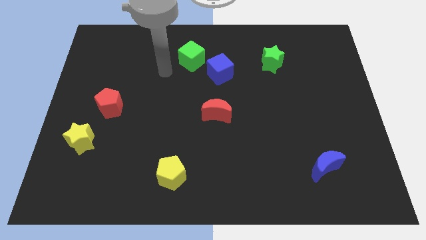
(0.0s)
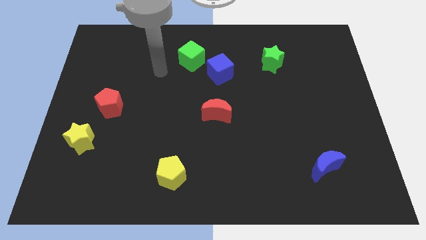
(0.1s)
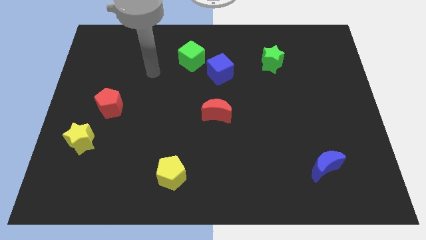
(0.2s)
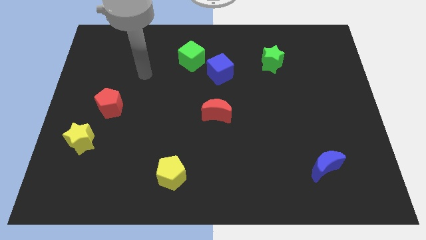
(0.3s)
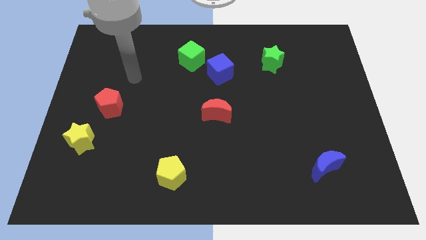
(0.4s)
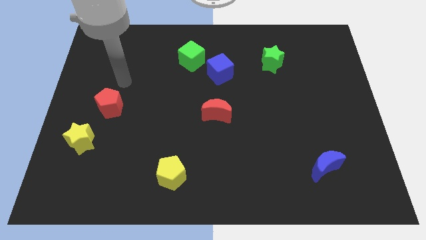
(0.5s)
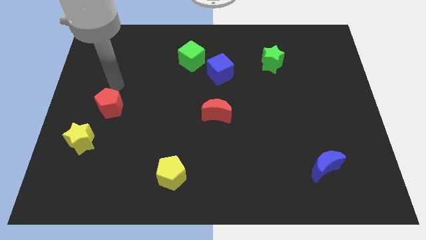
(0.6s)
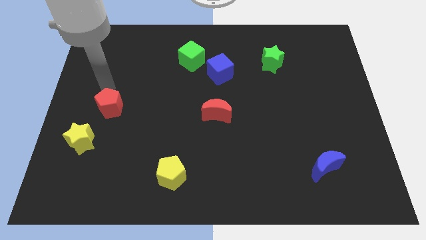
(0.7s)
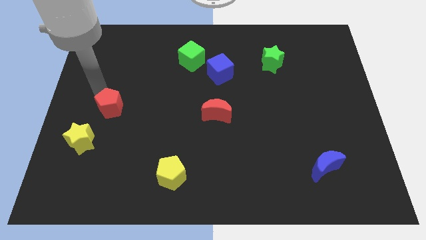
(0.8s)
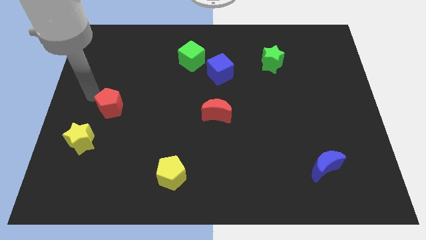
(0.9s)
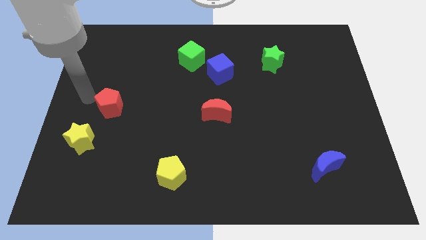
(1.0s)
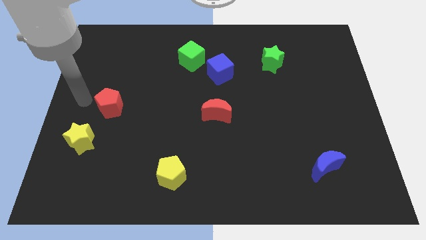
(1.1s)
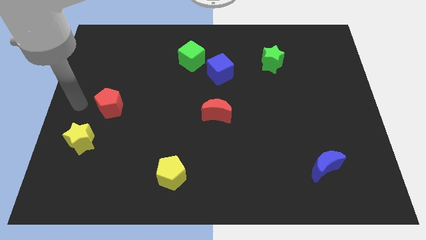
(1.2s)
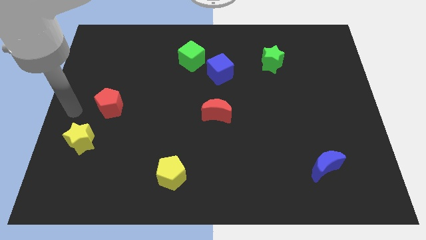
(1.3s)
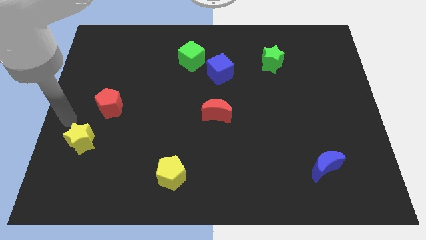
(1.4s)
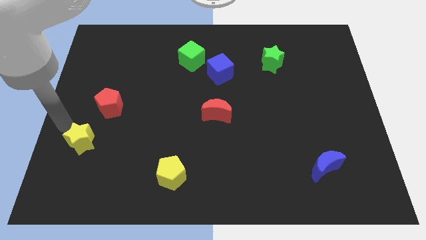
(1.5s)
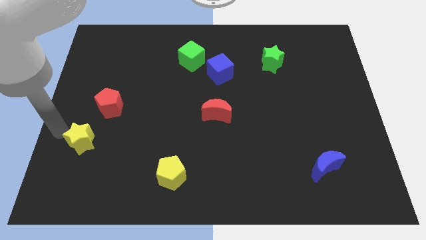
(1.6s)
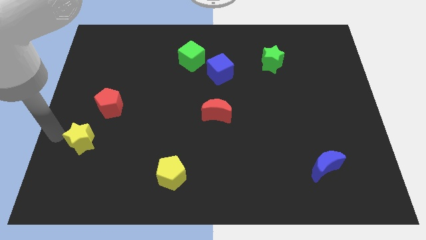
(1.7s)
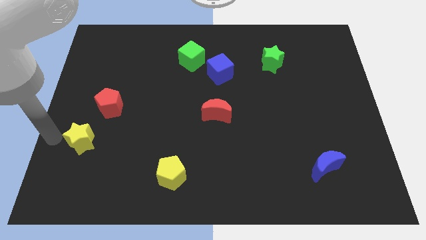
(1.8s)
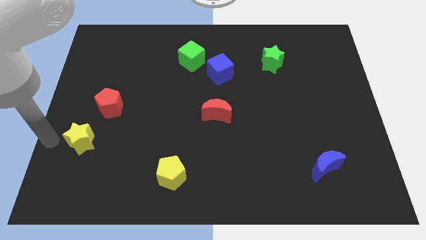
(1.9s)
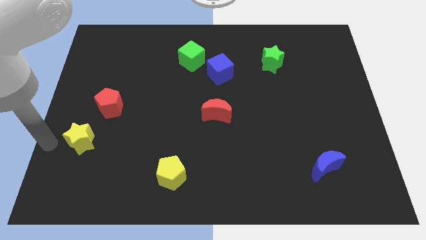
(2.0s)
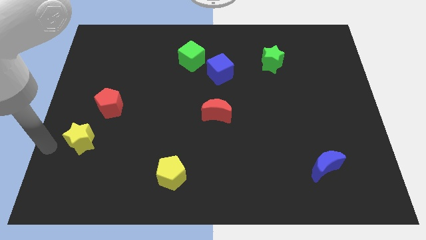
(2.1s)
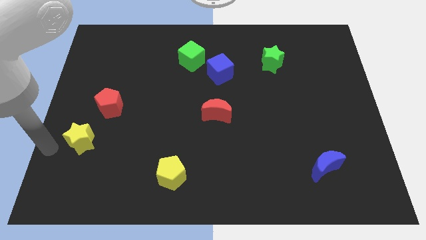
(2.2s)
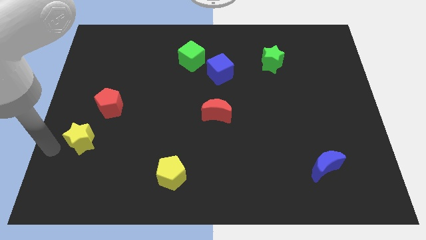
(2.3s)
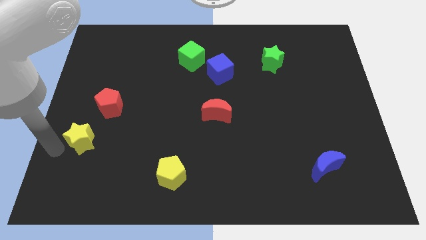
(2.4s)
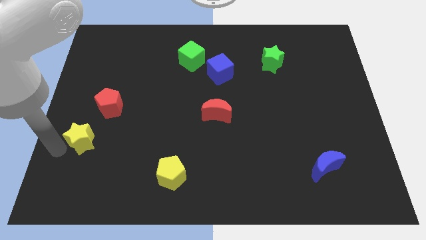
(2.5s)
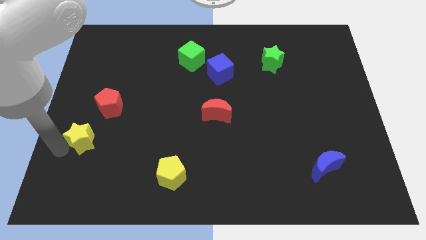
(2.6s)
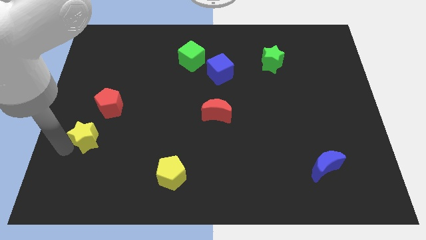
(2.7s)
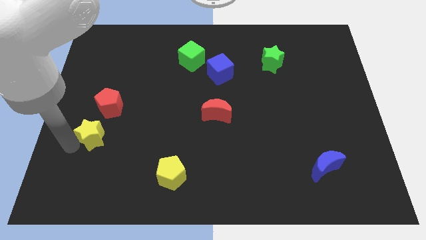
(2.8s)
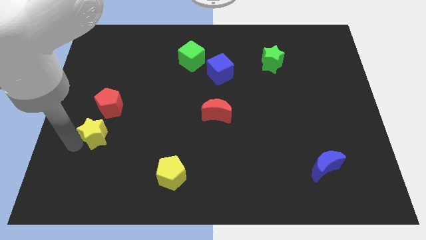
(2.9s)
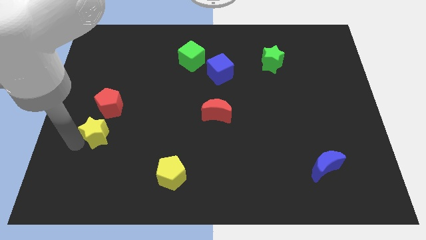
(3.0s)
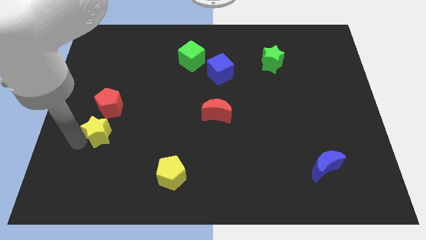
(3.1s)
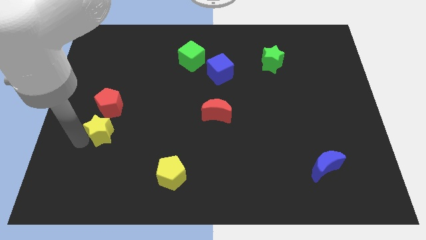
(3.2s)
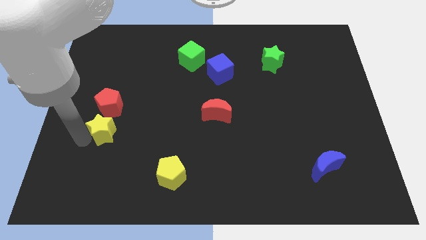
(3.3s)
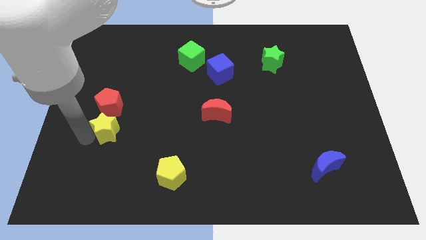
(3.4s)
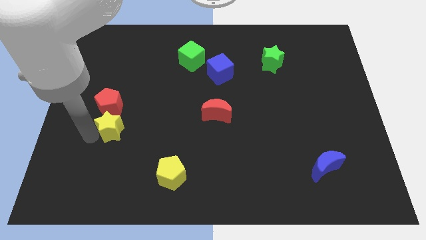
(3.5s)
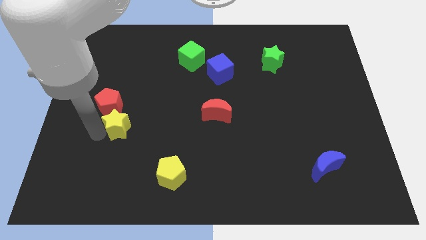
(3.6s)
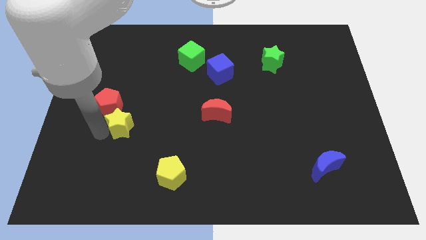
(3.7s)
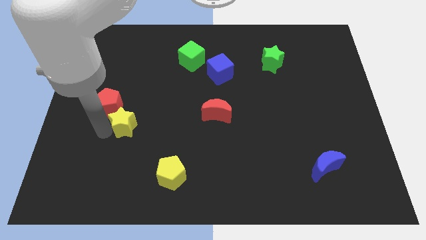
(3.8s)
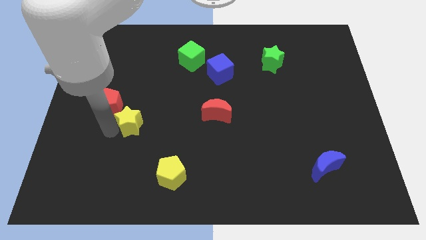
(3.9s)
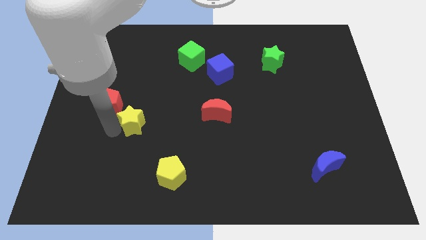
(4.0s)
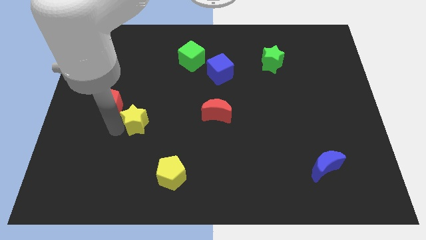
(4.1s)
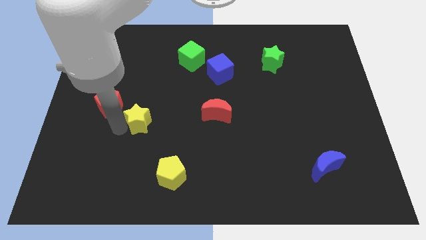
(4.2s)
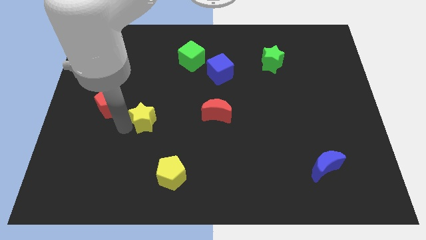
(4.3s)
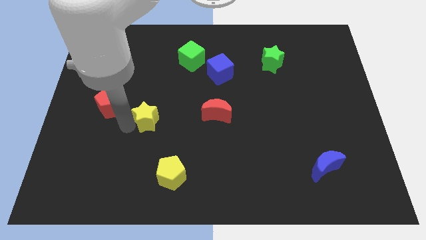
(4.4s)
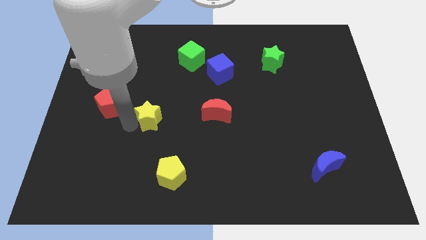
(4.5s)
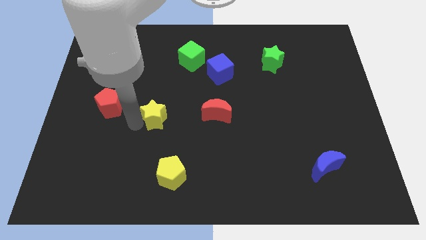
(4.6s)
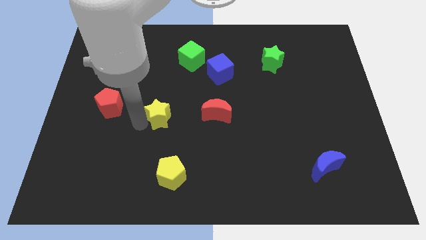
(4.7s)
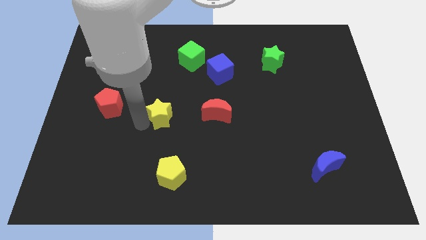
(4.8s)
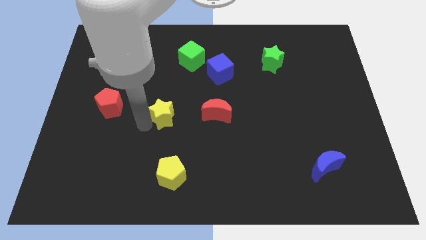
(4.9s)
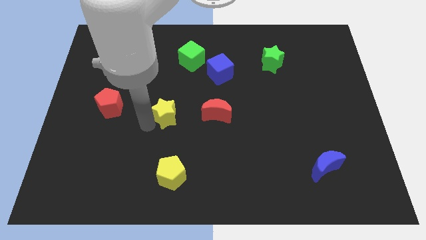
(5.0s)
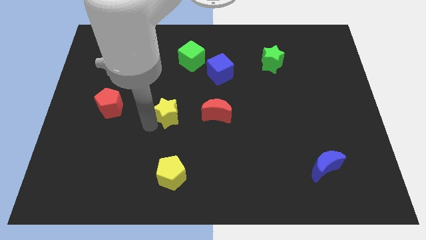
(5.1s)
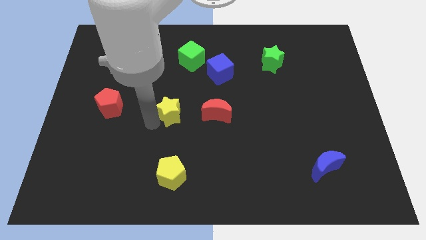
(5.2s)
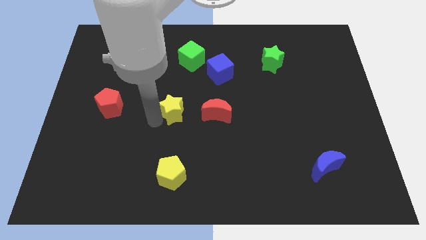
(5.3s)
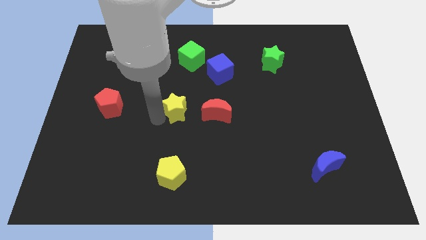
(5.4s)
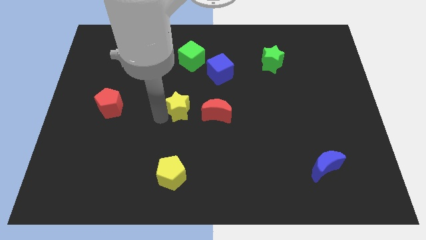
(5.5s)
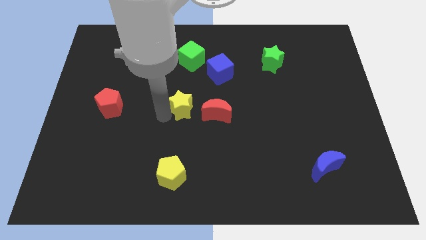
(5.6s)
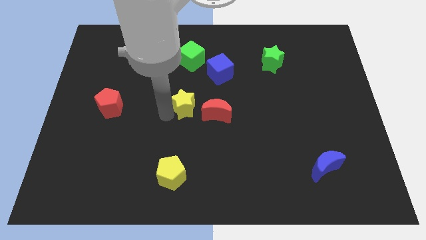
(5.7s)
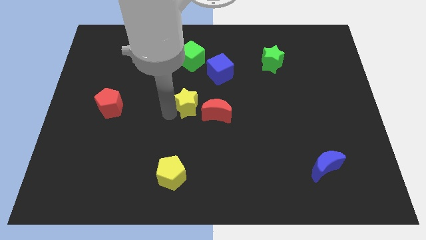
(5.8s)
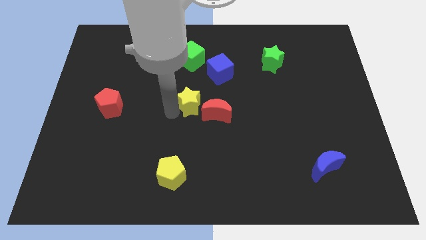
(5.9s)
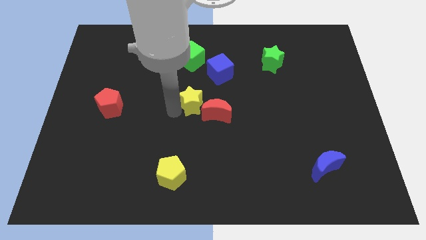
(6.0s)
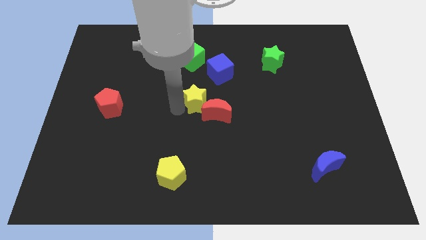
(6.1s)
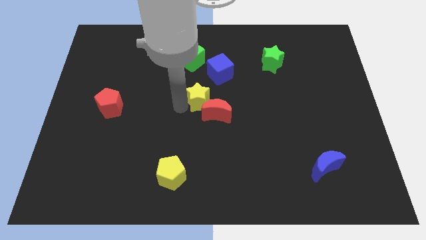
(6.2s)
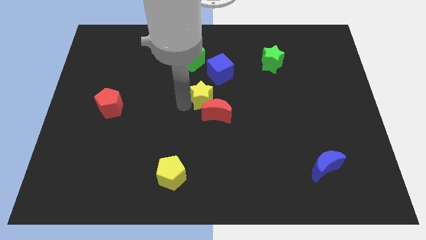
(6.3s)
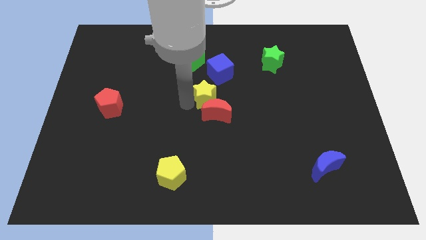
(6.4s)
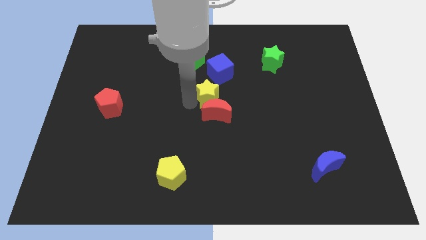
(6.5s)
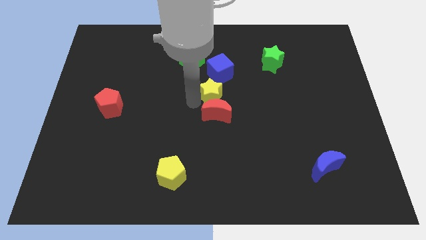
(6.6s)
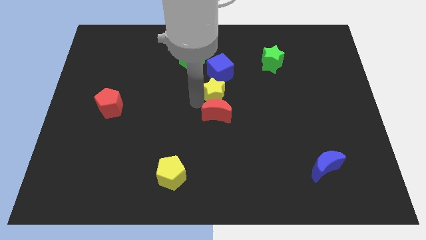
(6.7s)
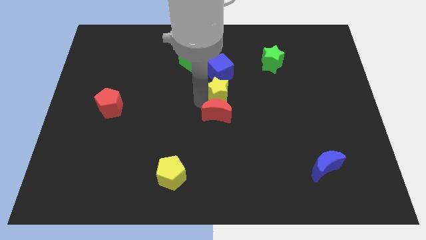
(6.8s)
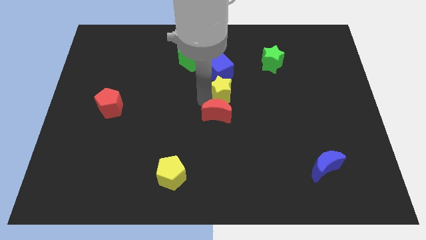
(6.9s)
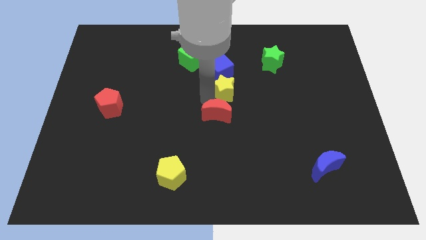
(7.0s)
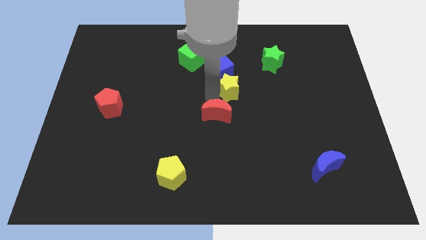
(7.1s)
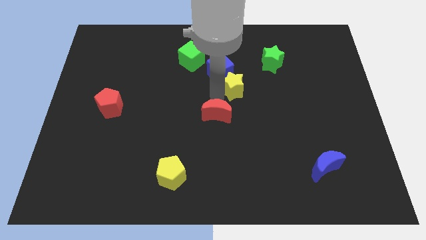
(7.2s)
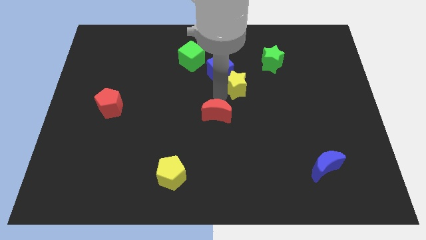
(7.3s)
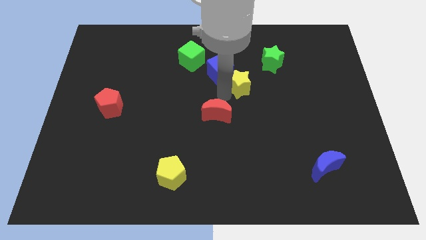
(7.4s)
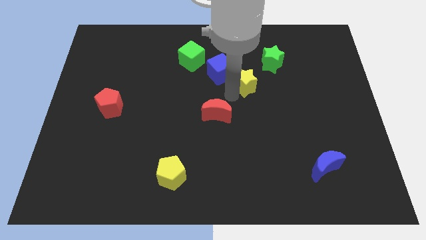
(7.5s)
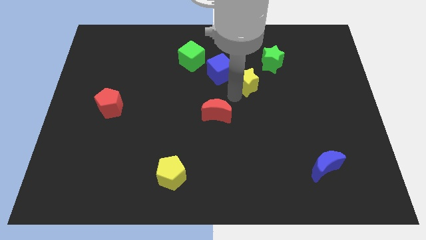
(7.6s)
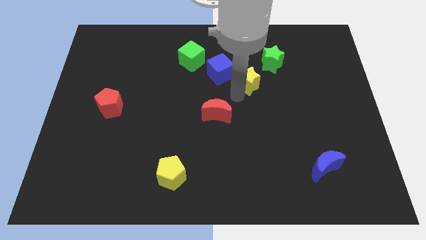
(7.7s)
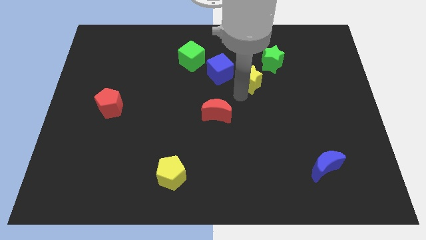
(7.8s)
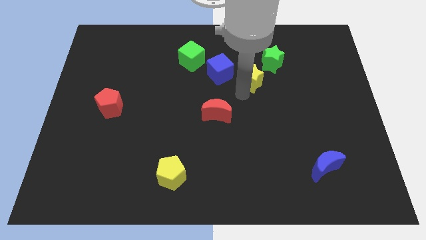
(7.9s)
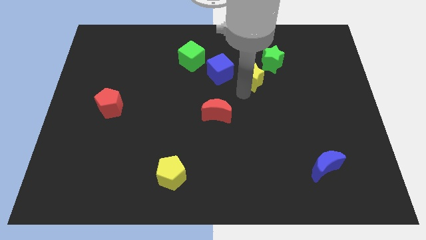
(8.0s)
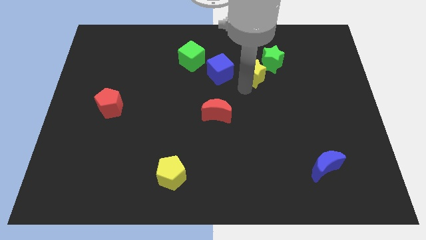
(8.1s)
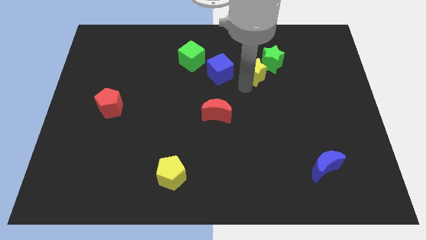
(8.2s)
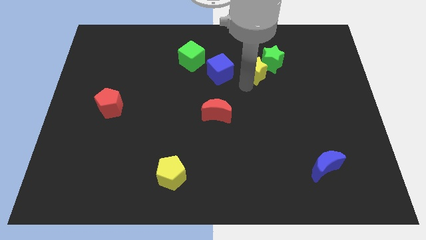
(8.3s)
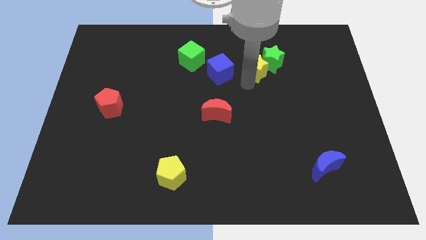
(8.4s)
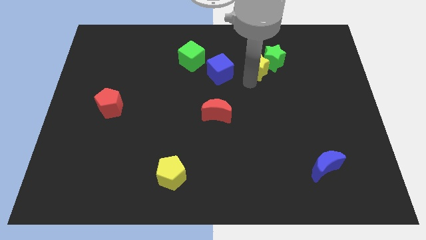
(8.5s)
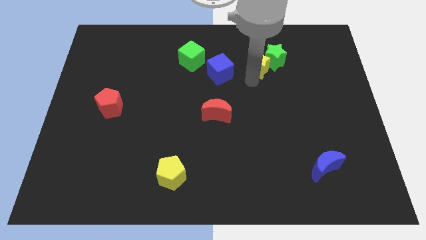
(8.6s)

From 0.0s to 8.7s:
push the yellow star close to the green star
